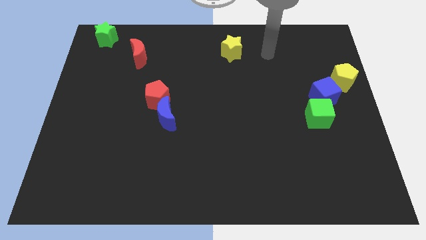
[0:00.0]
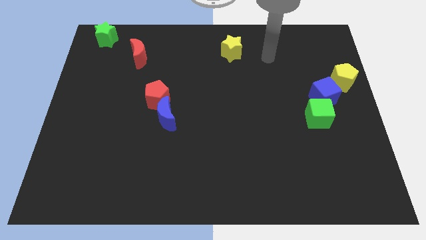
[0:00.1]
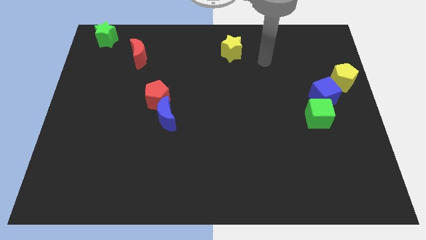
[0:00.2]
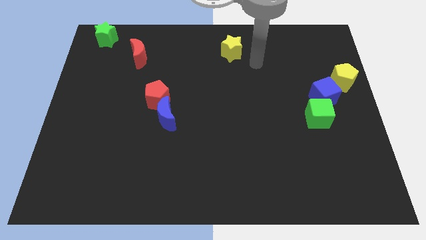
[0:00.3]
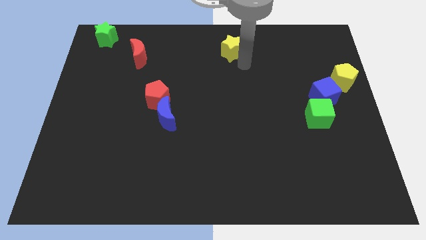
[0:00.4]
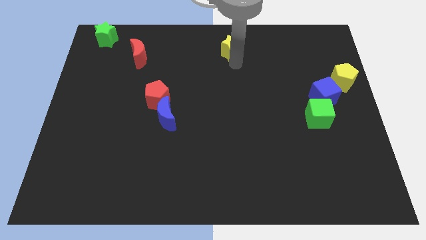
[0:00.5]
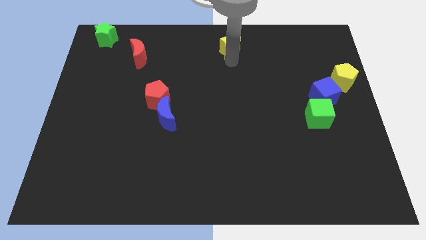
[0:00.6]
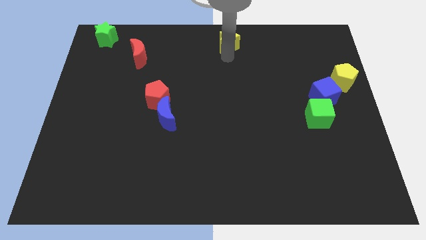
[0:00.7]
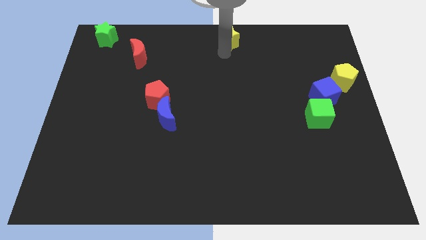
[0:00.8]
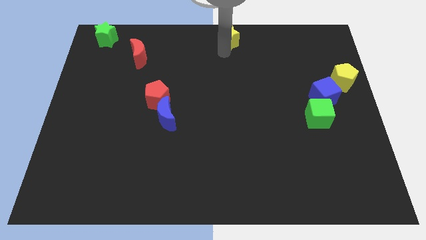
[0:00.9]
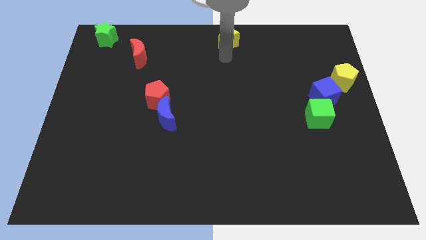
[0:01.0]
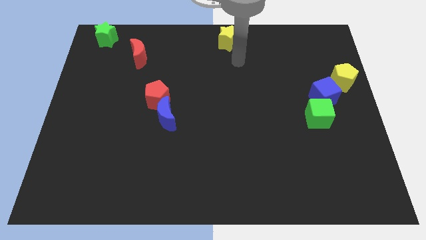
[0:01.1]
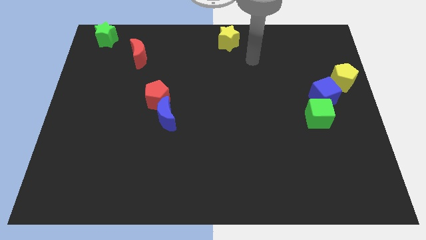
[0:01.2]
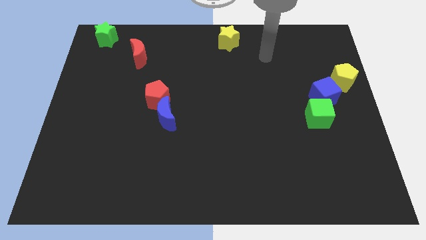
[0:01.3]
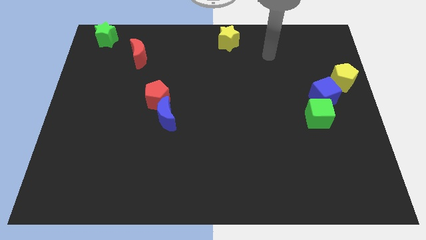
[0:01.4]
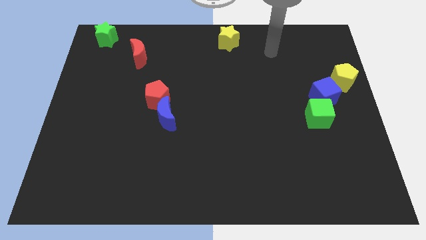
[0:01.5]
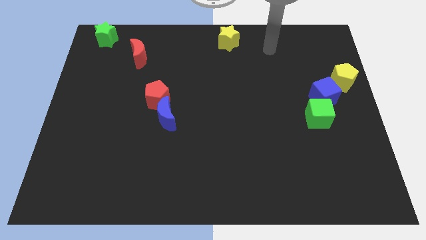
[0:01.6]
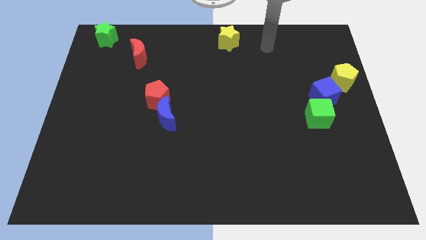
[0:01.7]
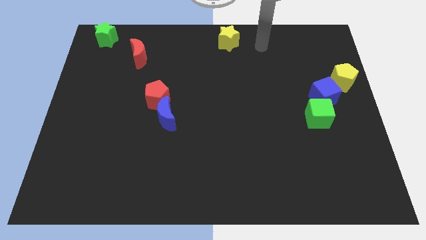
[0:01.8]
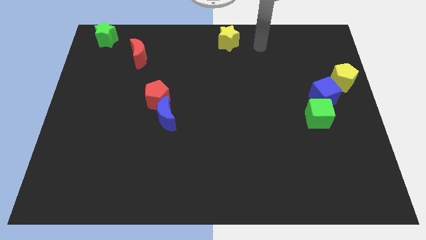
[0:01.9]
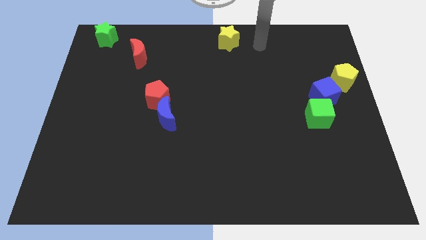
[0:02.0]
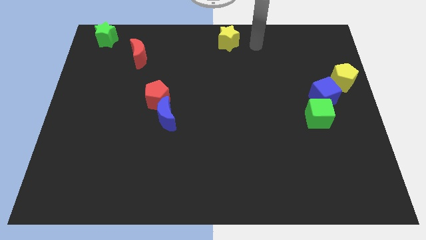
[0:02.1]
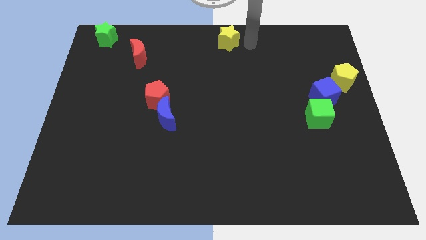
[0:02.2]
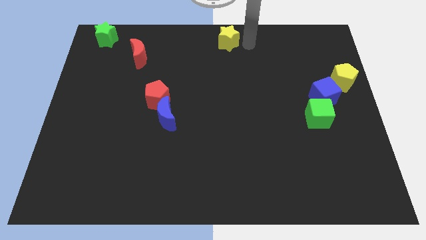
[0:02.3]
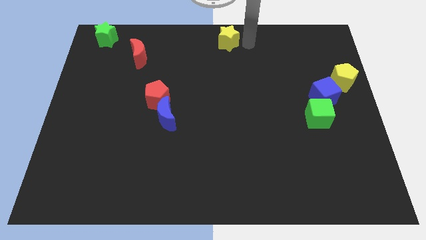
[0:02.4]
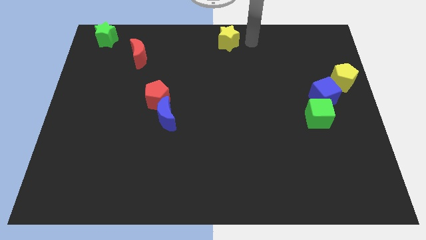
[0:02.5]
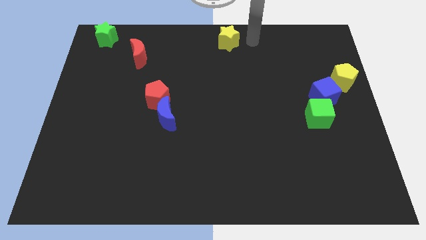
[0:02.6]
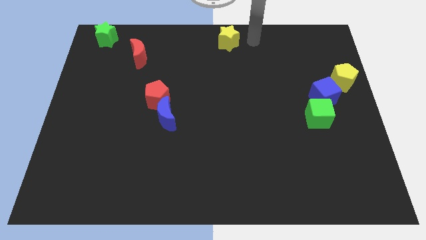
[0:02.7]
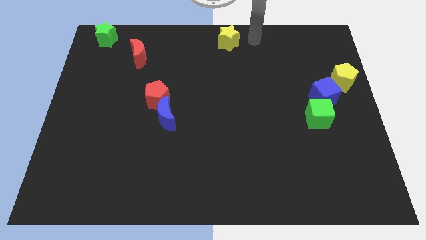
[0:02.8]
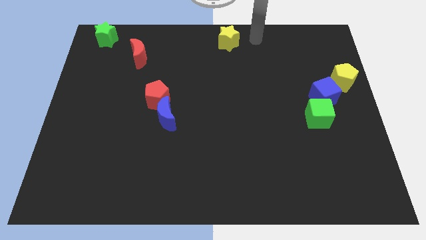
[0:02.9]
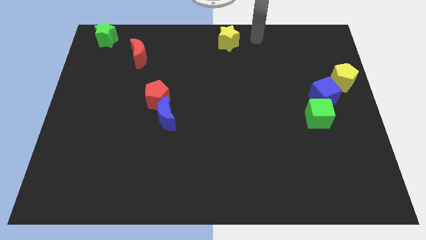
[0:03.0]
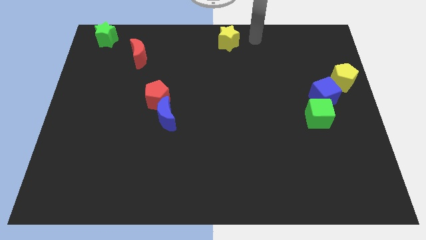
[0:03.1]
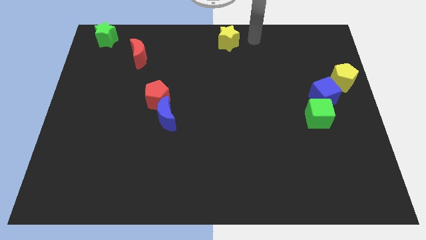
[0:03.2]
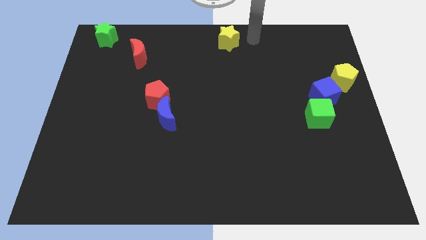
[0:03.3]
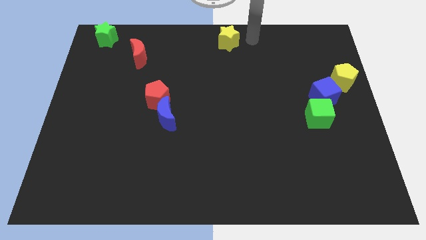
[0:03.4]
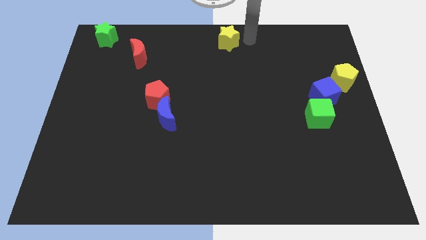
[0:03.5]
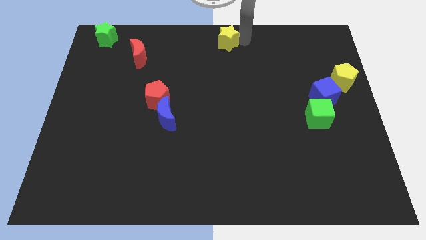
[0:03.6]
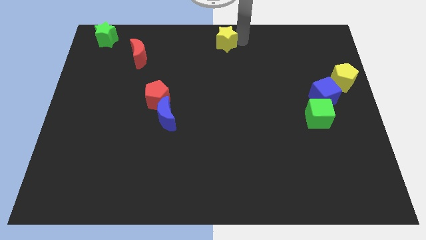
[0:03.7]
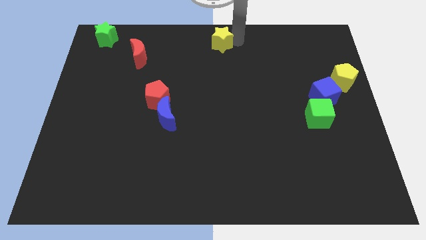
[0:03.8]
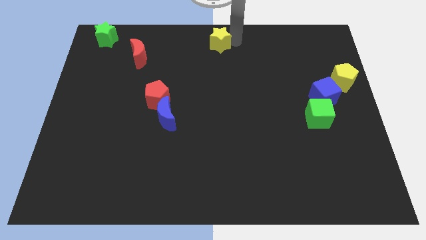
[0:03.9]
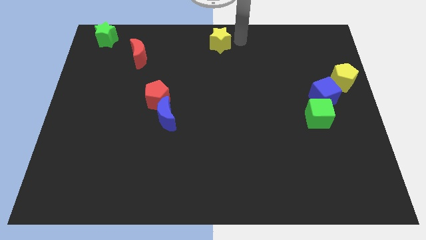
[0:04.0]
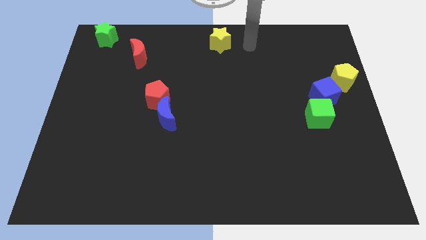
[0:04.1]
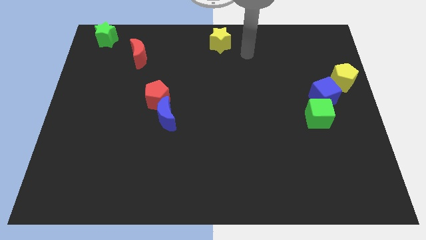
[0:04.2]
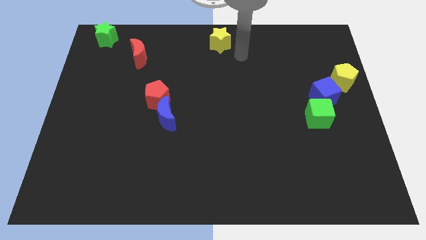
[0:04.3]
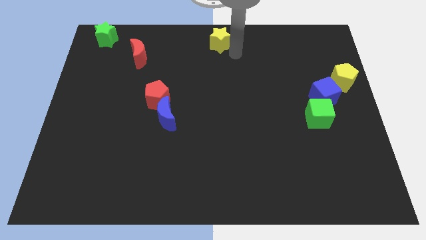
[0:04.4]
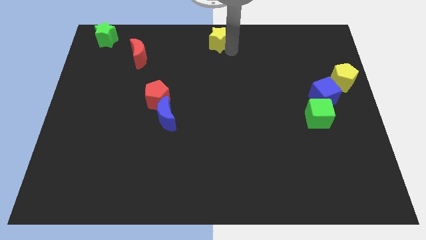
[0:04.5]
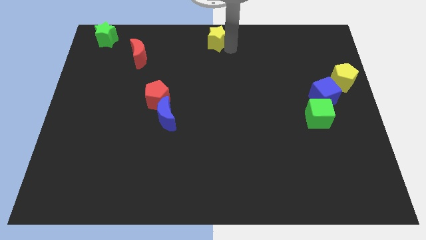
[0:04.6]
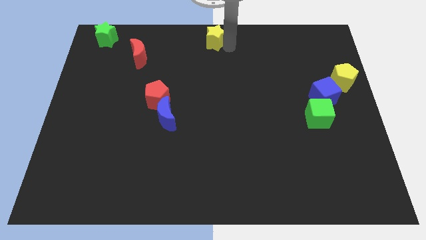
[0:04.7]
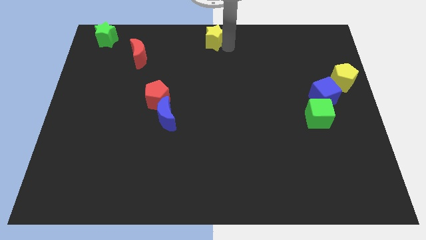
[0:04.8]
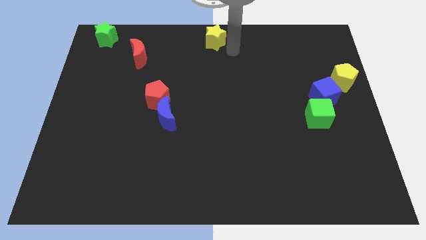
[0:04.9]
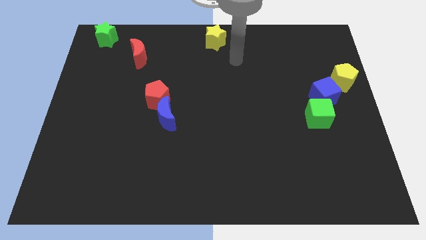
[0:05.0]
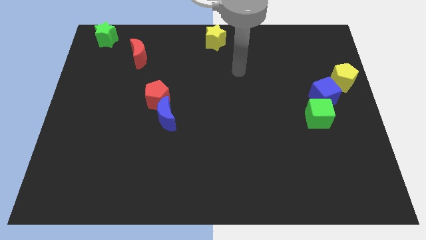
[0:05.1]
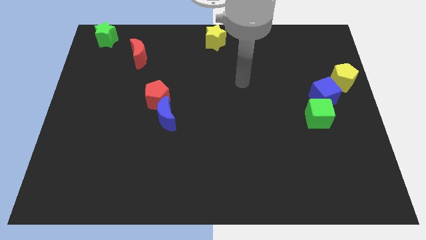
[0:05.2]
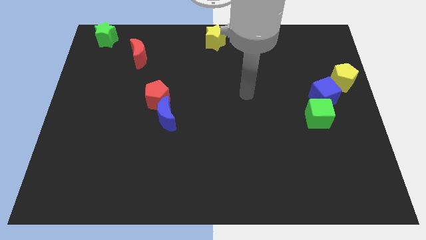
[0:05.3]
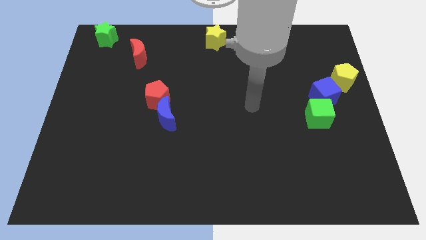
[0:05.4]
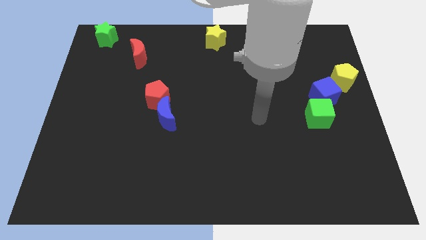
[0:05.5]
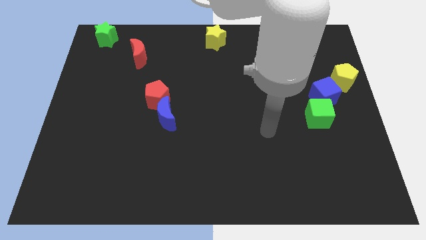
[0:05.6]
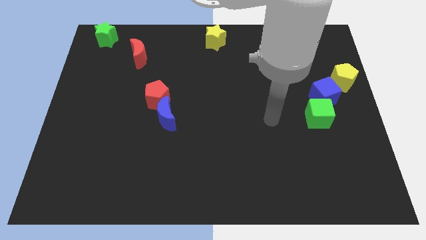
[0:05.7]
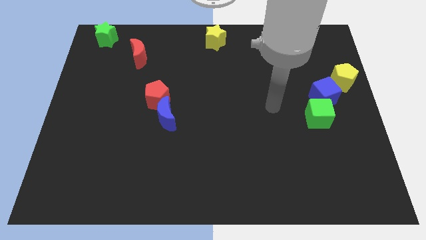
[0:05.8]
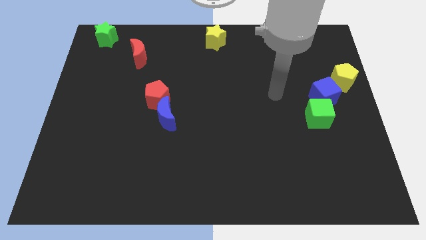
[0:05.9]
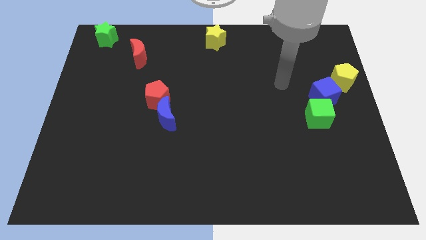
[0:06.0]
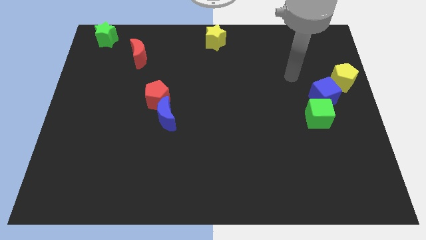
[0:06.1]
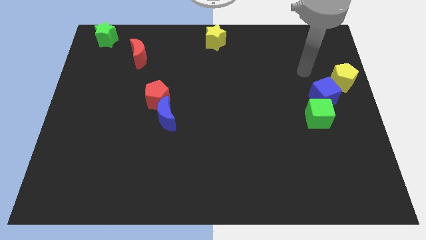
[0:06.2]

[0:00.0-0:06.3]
place the yellow star at the top center of the board

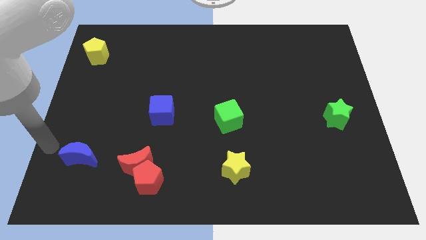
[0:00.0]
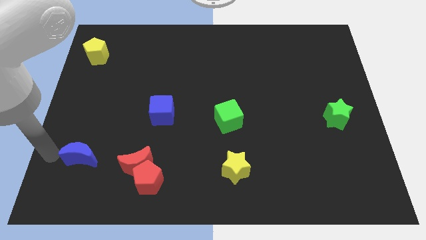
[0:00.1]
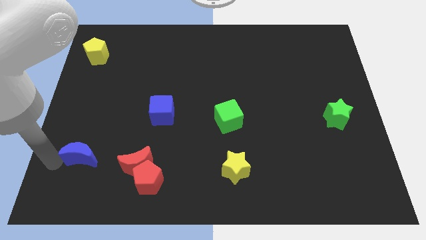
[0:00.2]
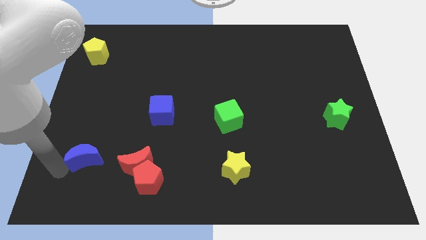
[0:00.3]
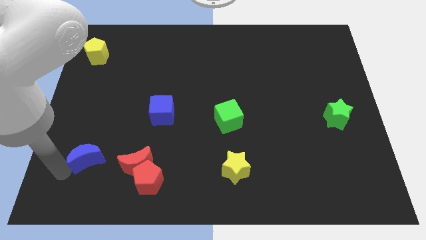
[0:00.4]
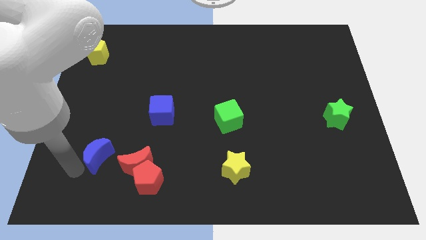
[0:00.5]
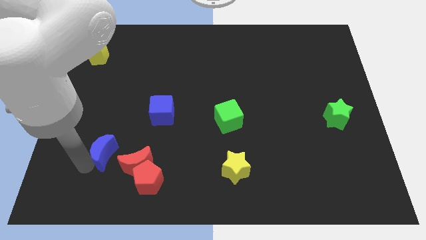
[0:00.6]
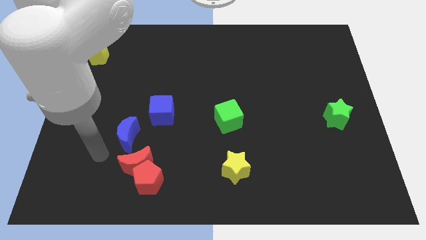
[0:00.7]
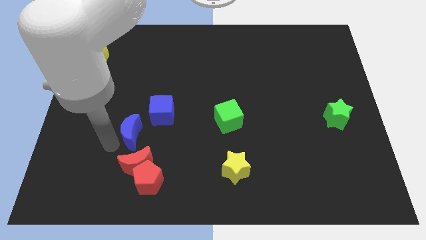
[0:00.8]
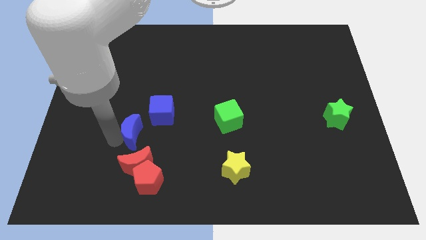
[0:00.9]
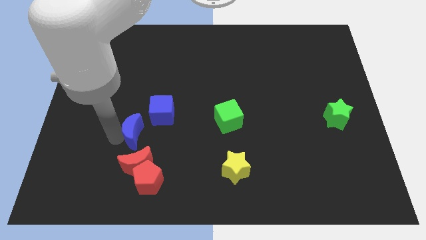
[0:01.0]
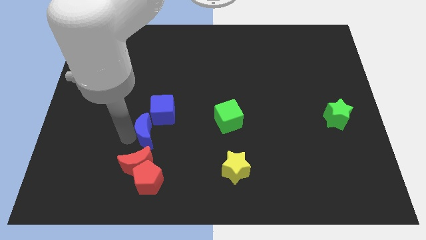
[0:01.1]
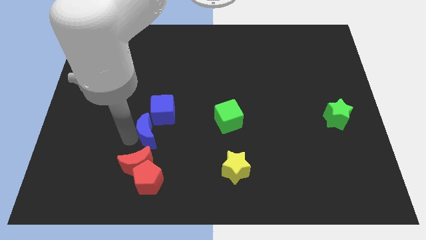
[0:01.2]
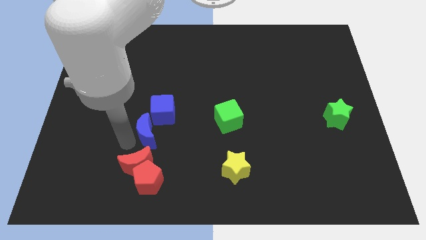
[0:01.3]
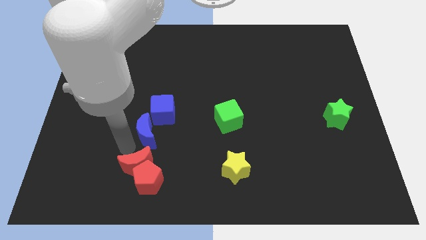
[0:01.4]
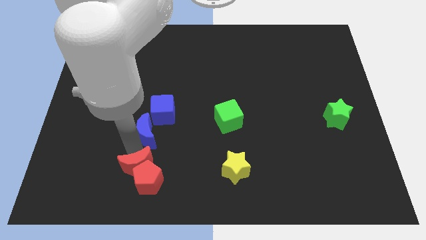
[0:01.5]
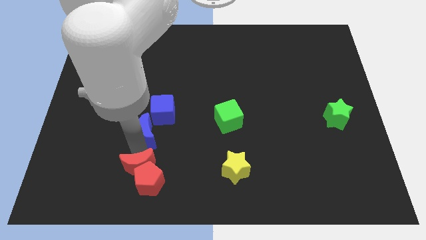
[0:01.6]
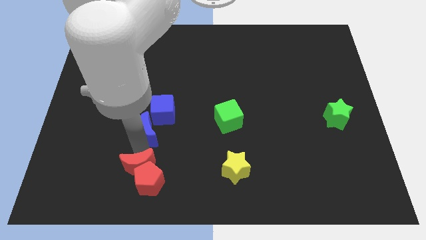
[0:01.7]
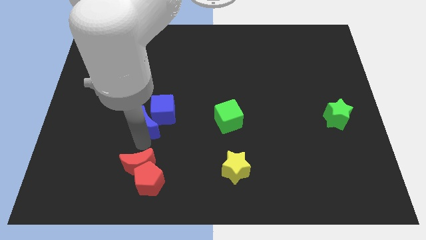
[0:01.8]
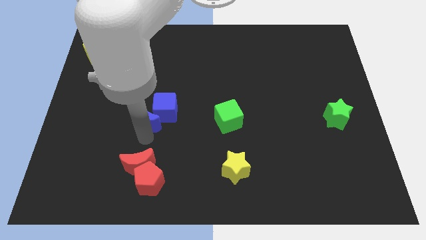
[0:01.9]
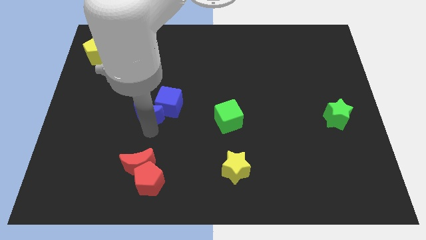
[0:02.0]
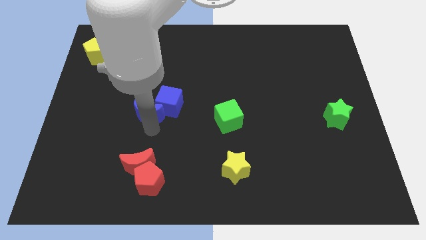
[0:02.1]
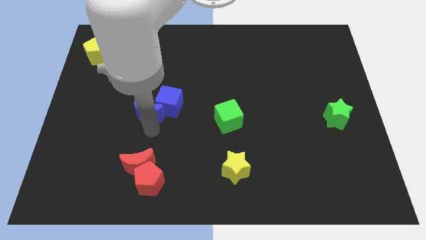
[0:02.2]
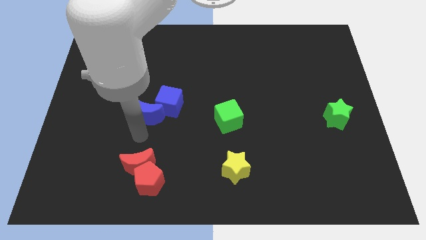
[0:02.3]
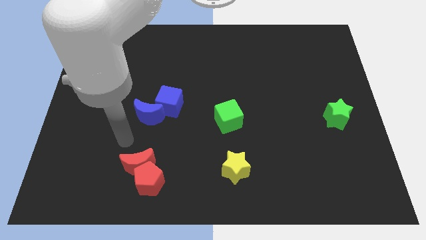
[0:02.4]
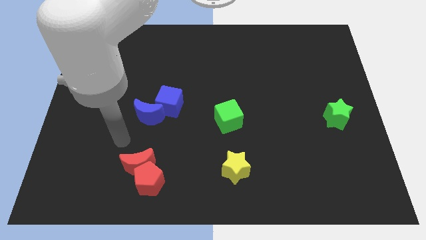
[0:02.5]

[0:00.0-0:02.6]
push the blue moon into blue cube
